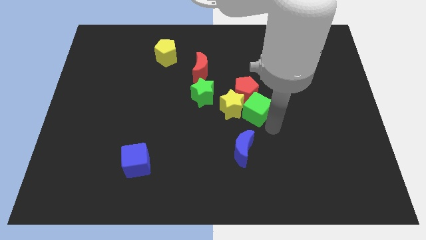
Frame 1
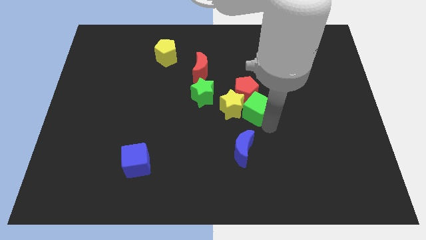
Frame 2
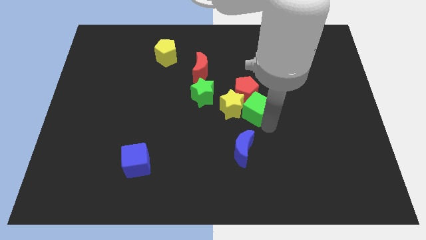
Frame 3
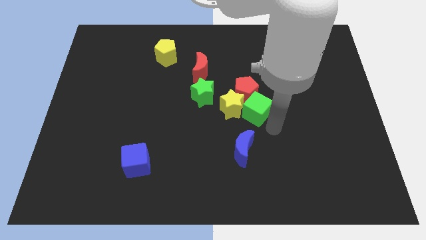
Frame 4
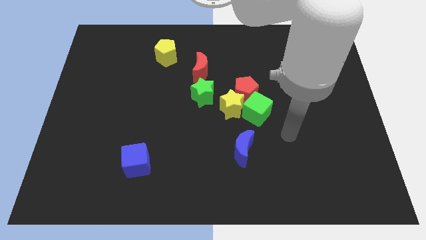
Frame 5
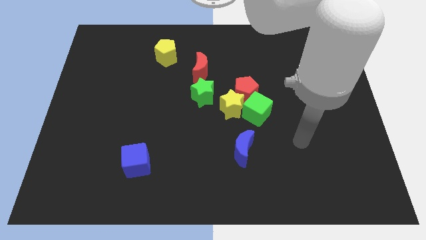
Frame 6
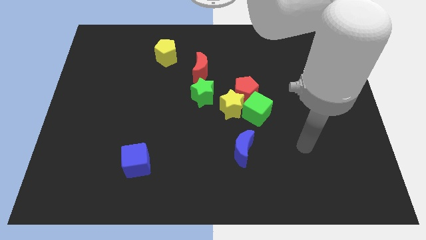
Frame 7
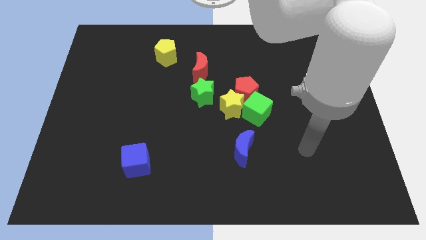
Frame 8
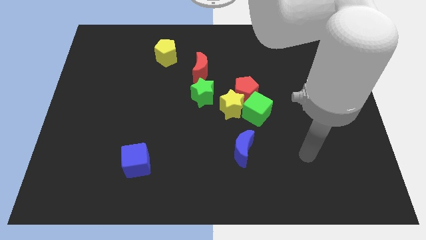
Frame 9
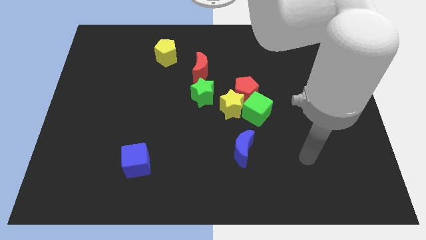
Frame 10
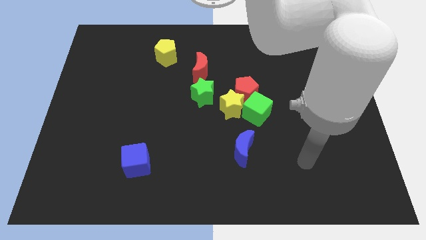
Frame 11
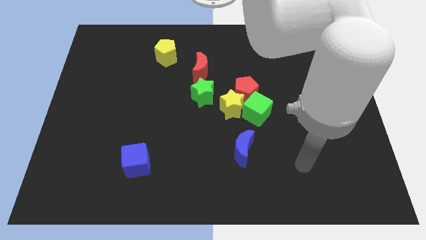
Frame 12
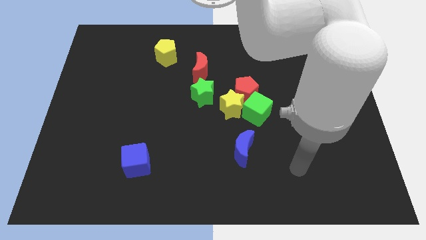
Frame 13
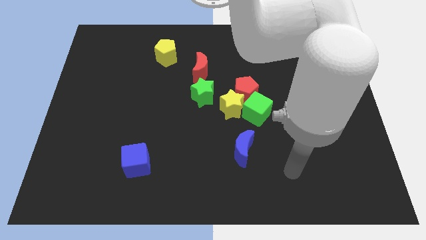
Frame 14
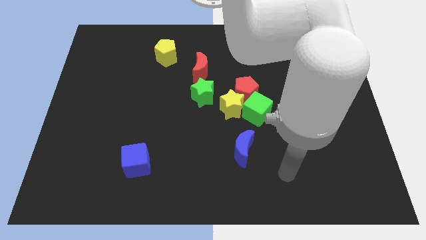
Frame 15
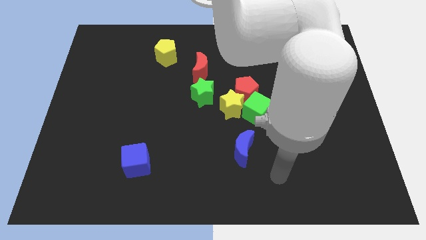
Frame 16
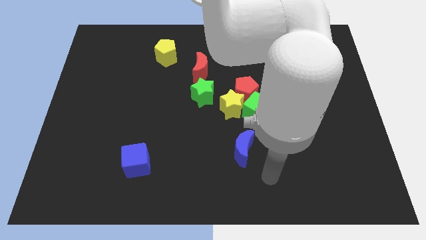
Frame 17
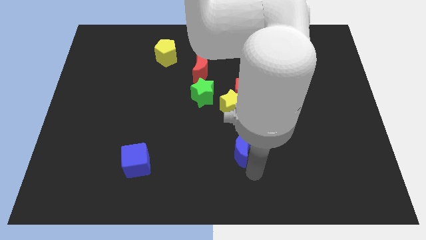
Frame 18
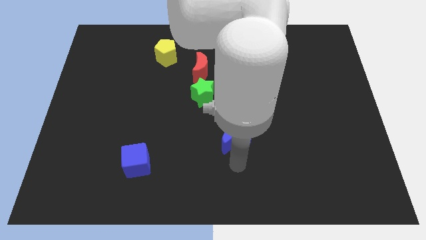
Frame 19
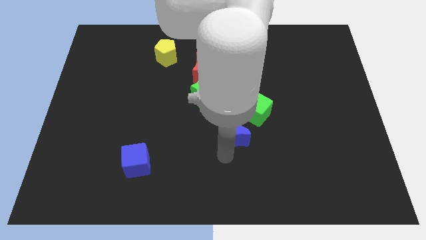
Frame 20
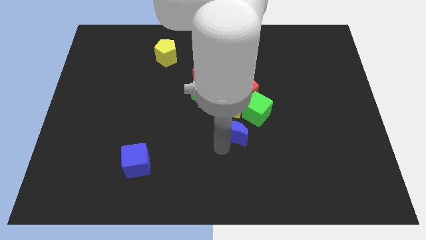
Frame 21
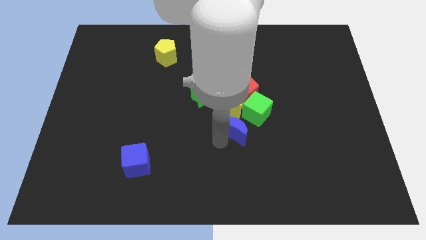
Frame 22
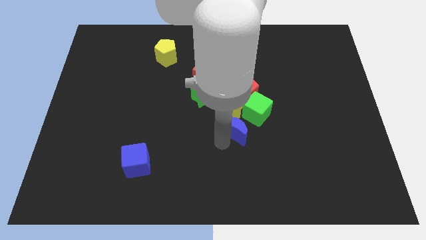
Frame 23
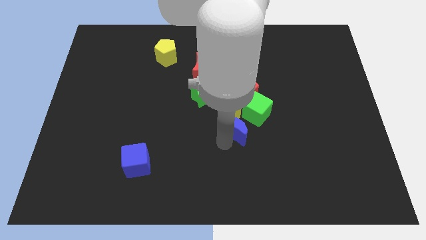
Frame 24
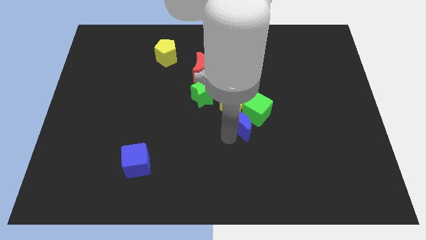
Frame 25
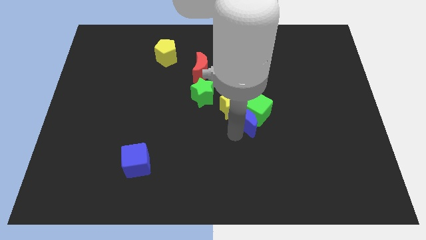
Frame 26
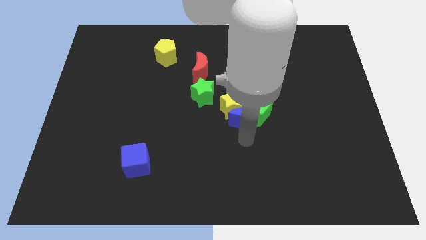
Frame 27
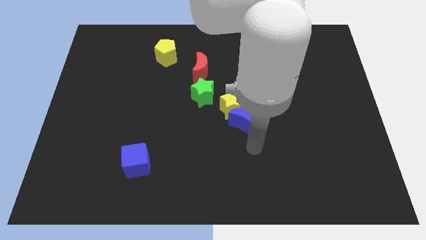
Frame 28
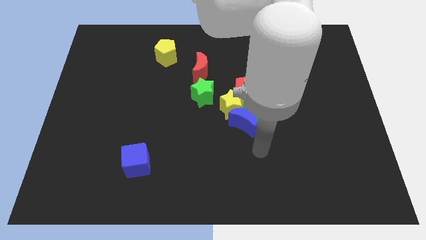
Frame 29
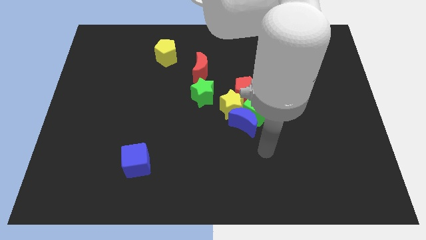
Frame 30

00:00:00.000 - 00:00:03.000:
push the blue moon into the green cube

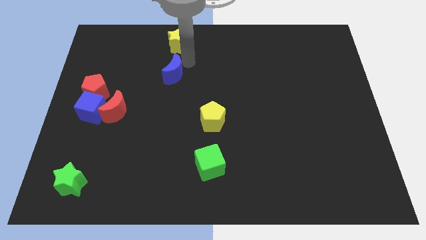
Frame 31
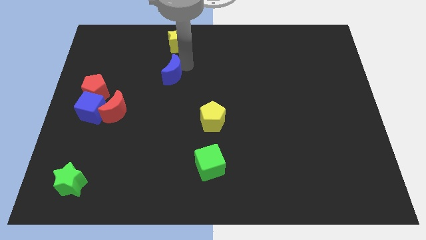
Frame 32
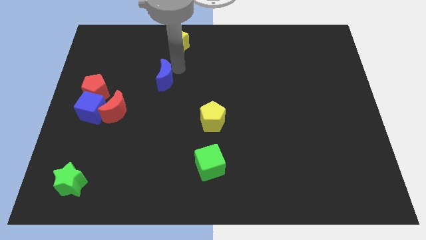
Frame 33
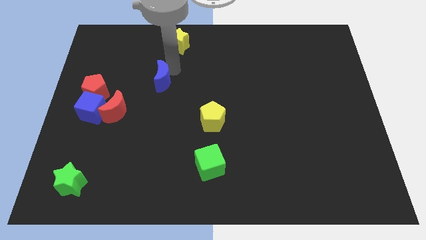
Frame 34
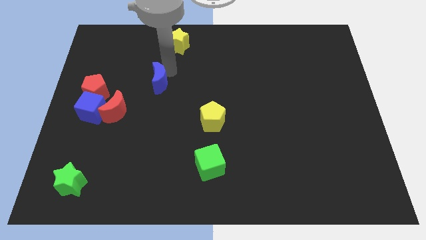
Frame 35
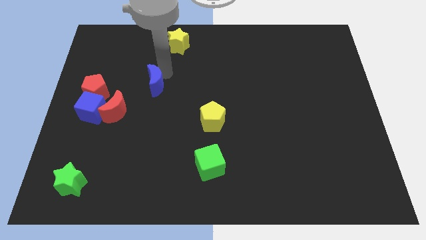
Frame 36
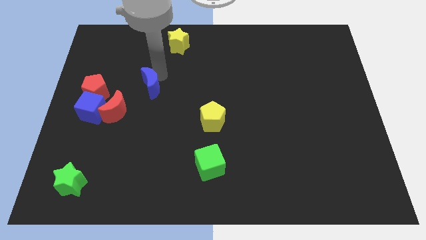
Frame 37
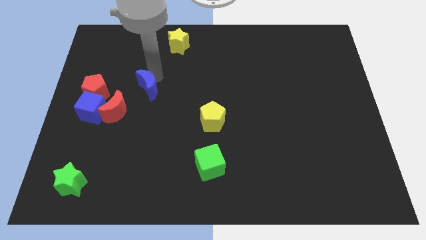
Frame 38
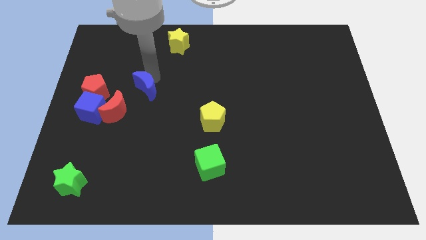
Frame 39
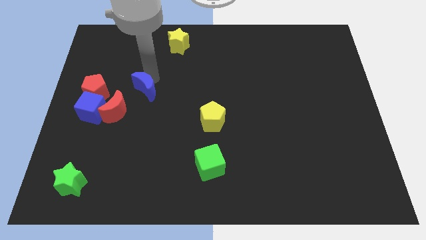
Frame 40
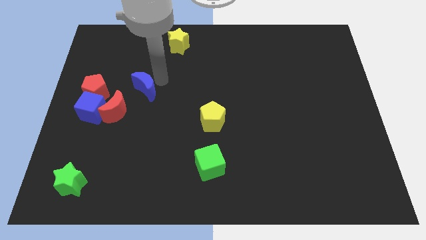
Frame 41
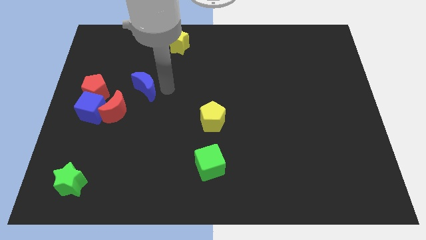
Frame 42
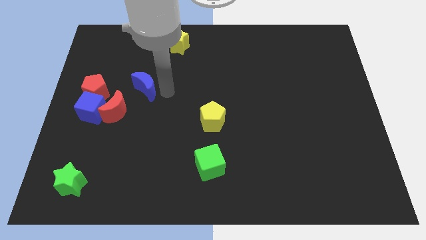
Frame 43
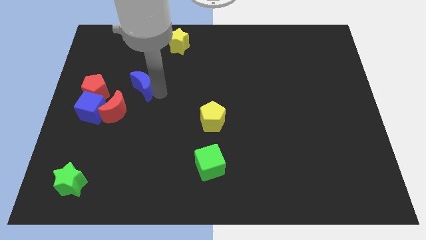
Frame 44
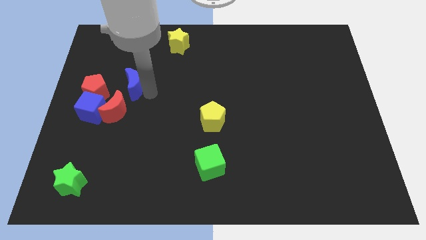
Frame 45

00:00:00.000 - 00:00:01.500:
move the blue crescent away from the yellow star

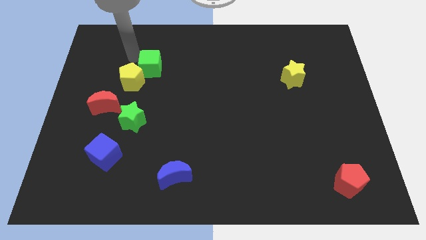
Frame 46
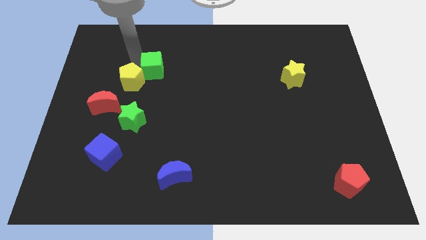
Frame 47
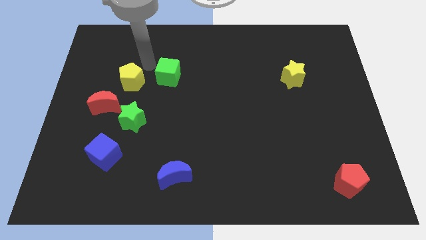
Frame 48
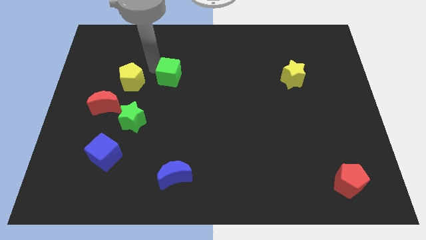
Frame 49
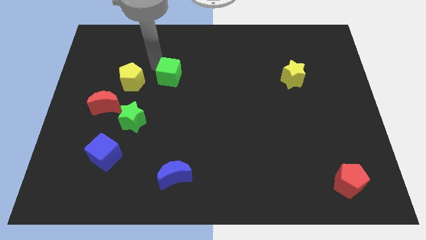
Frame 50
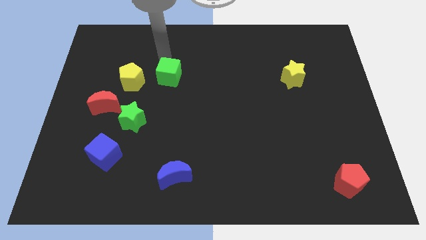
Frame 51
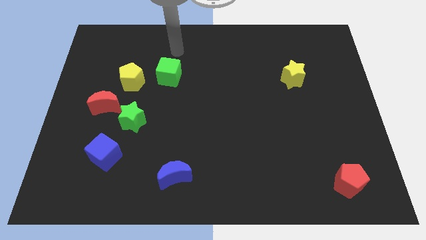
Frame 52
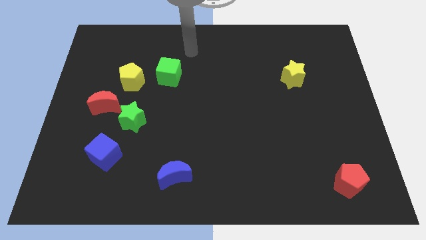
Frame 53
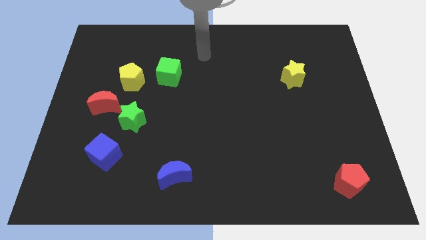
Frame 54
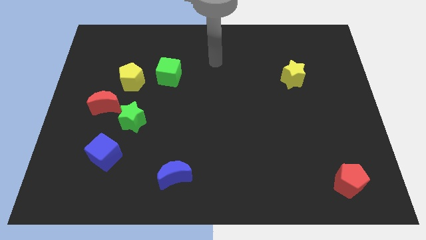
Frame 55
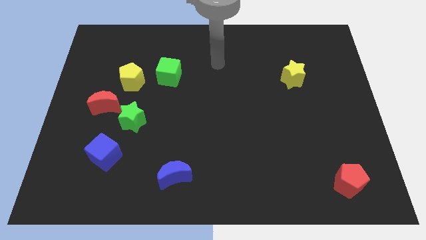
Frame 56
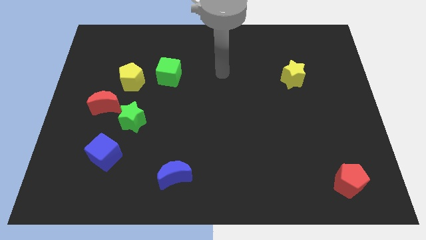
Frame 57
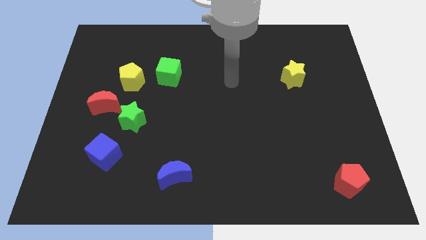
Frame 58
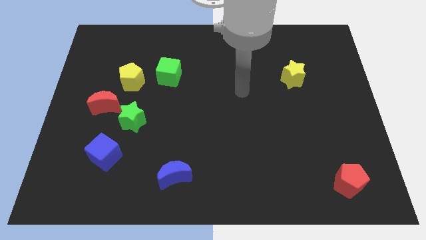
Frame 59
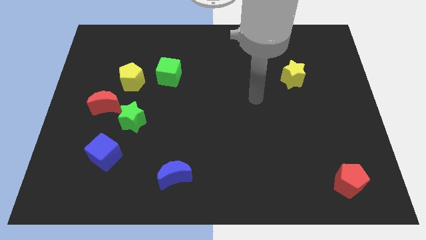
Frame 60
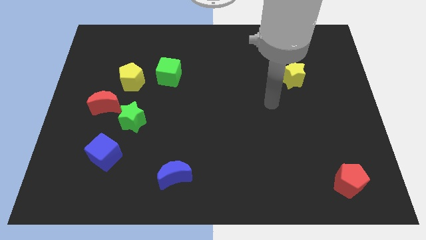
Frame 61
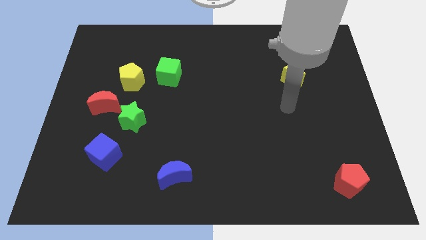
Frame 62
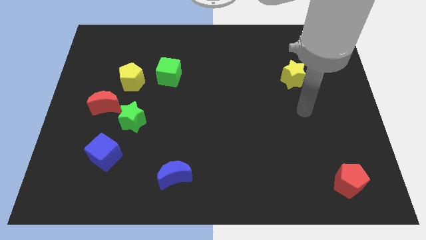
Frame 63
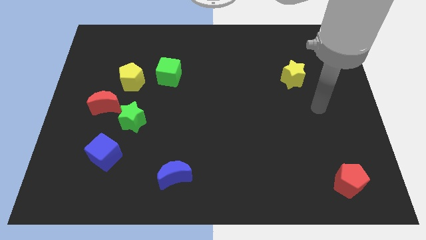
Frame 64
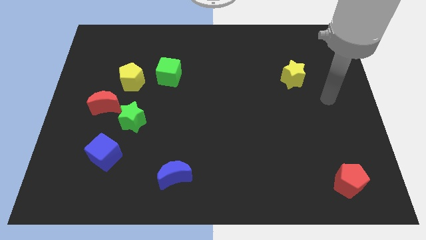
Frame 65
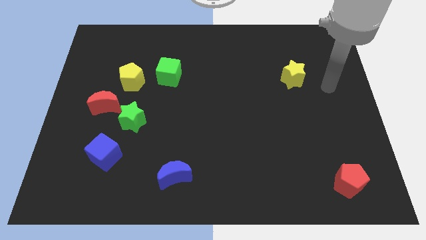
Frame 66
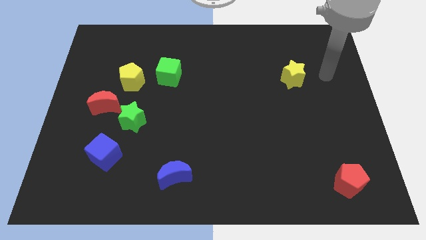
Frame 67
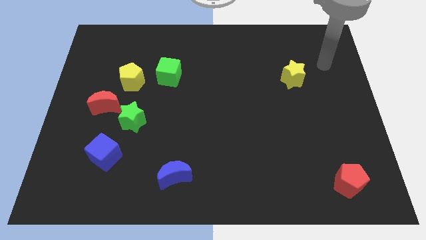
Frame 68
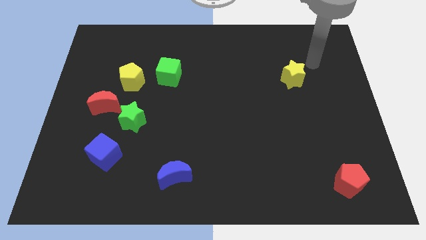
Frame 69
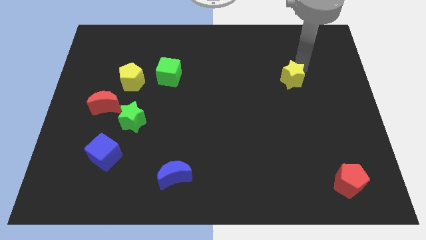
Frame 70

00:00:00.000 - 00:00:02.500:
place the arm above the yellow star

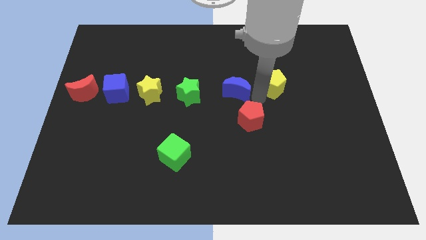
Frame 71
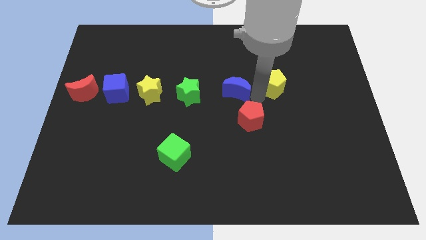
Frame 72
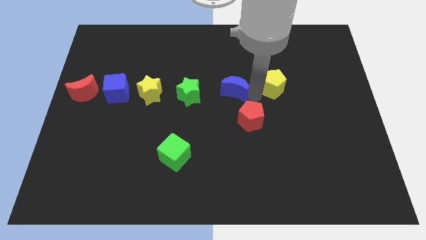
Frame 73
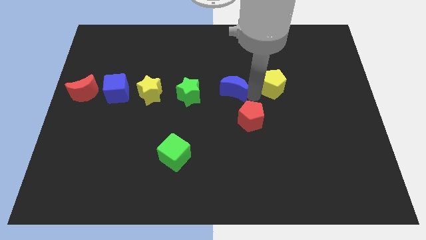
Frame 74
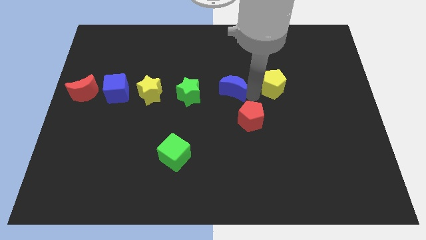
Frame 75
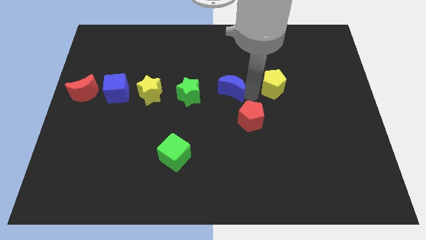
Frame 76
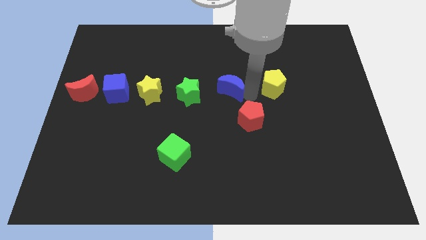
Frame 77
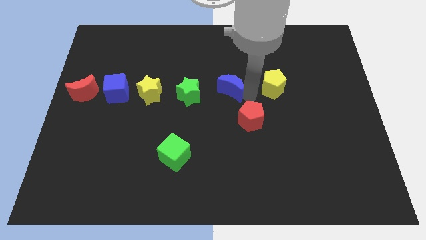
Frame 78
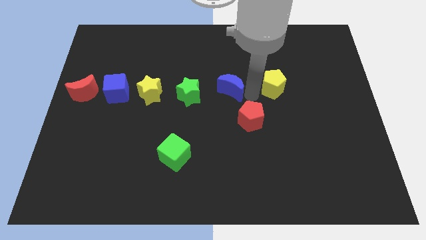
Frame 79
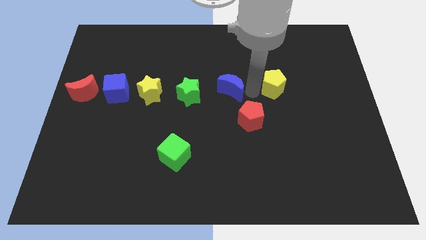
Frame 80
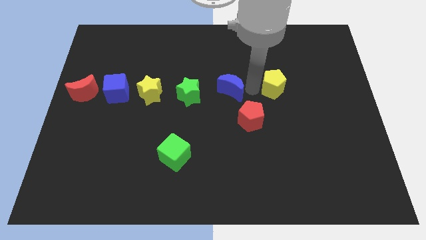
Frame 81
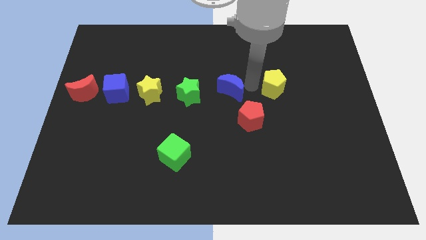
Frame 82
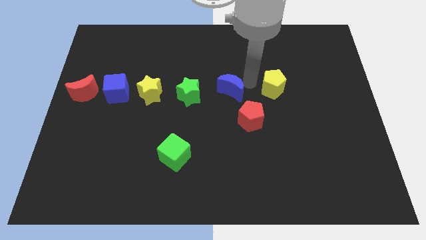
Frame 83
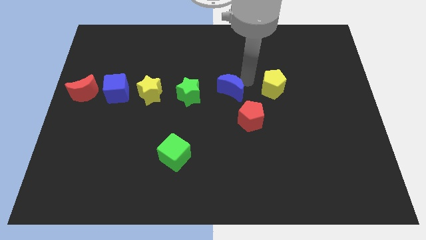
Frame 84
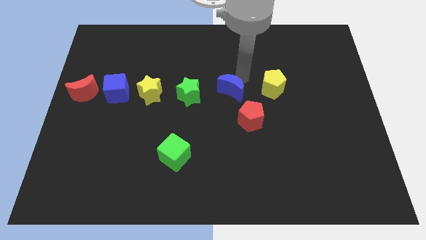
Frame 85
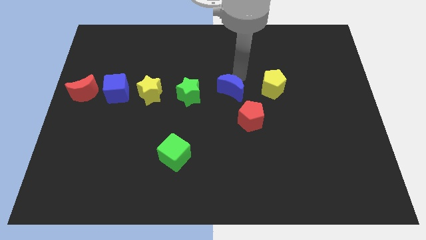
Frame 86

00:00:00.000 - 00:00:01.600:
place the blue crescent parallel to the right side of the green star

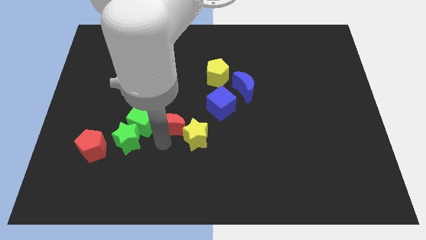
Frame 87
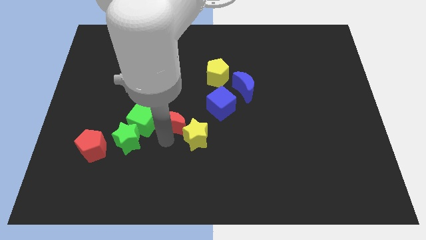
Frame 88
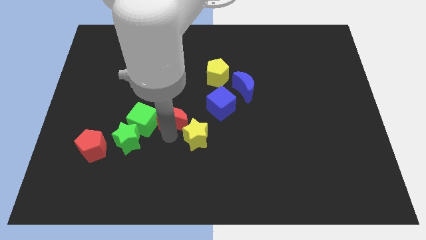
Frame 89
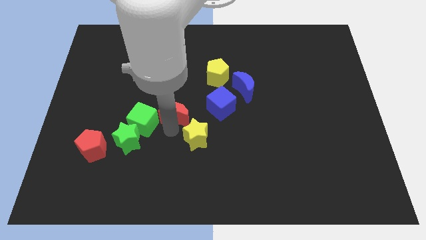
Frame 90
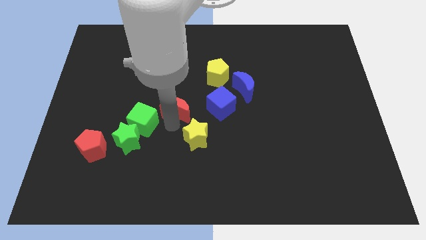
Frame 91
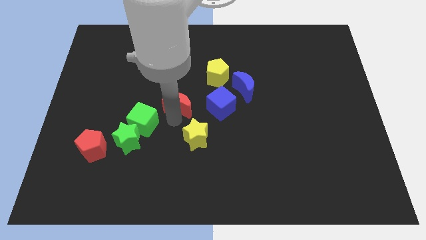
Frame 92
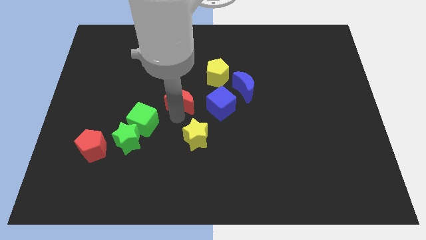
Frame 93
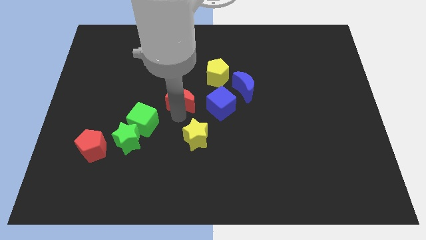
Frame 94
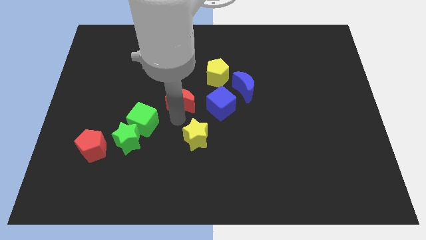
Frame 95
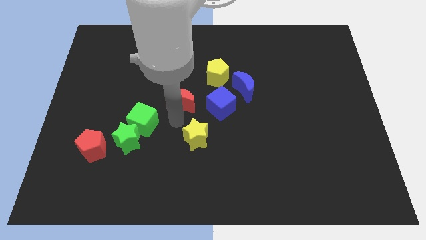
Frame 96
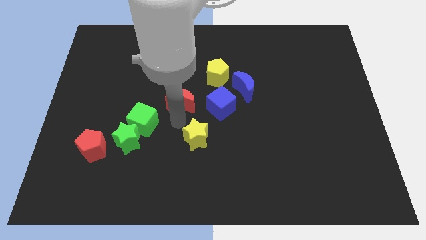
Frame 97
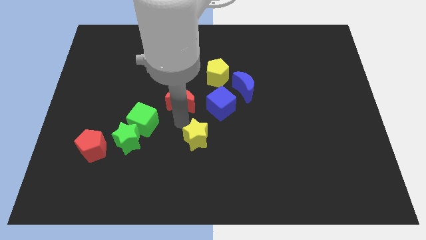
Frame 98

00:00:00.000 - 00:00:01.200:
move the red crescent to the left of the blue cube
